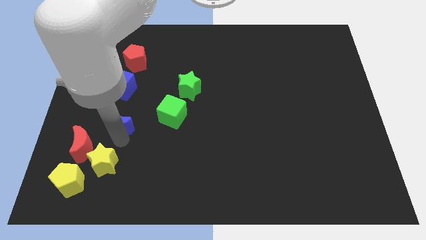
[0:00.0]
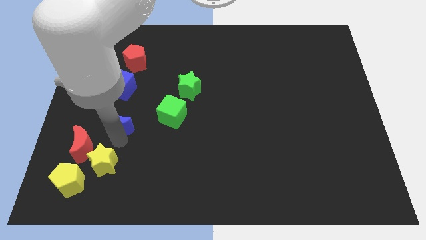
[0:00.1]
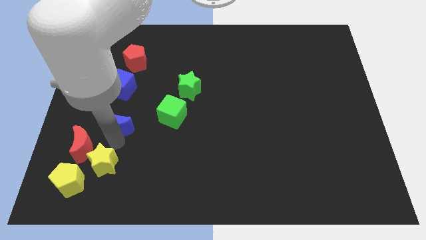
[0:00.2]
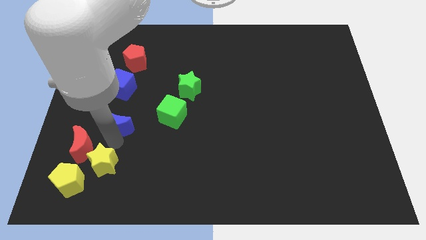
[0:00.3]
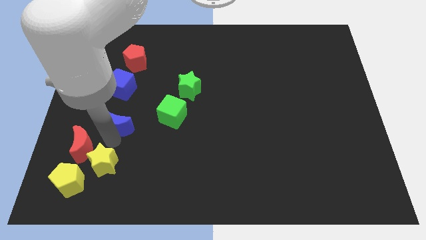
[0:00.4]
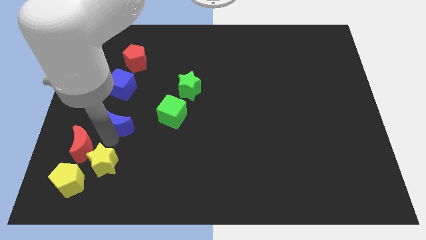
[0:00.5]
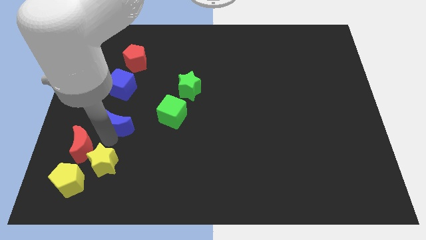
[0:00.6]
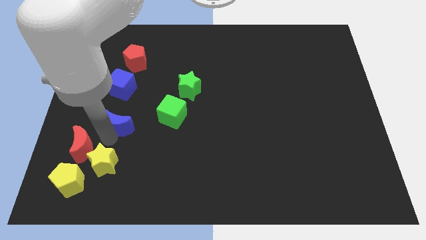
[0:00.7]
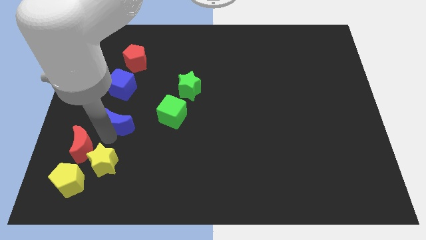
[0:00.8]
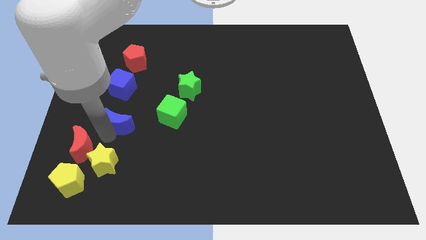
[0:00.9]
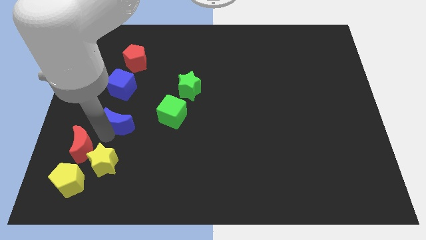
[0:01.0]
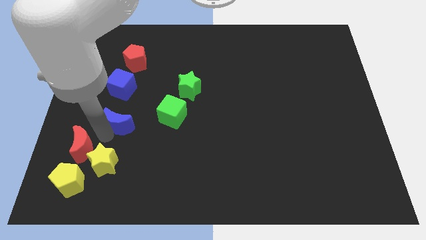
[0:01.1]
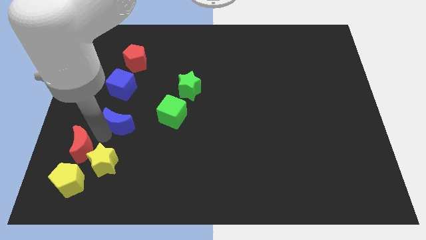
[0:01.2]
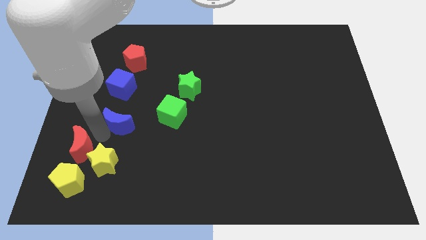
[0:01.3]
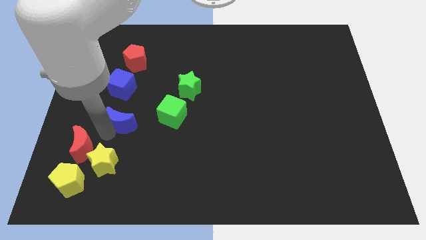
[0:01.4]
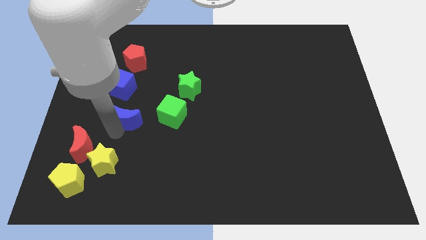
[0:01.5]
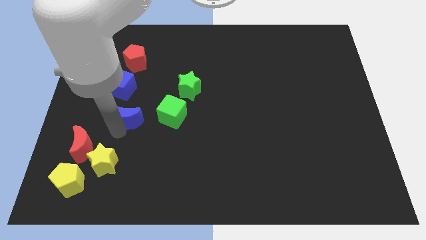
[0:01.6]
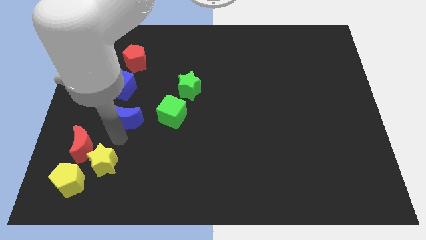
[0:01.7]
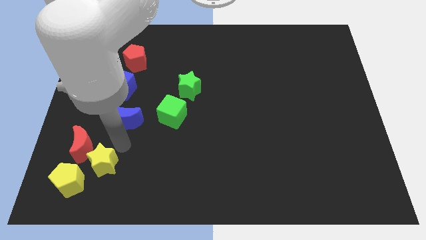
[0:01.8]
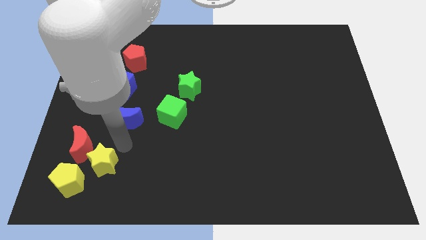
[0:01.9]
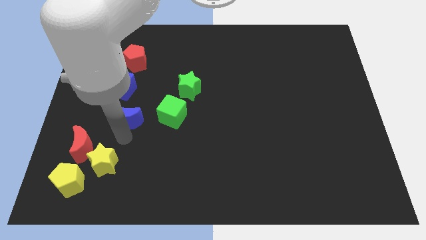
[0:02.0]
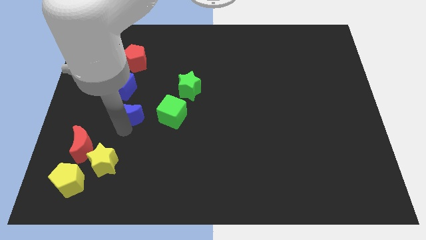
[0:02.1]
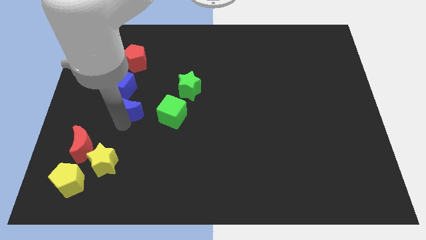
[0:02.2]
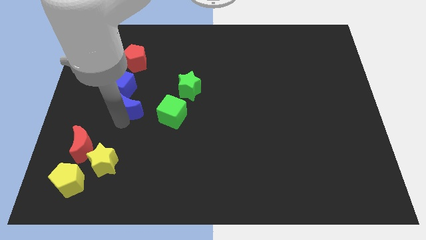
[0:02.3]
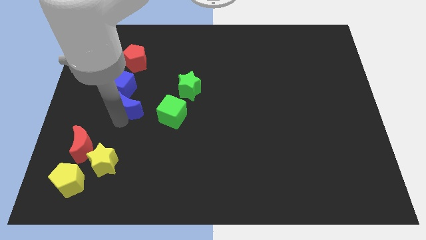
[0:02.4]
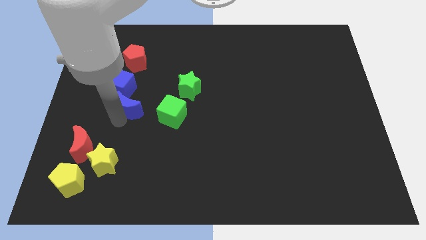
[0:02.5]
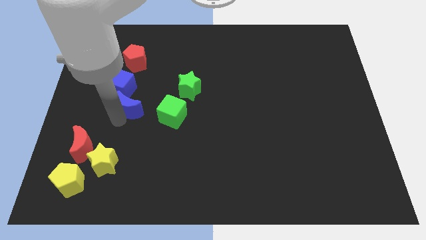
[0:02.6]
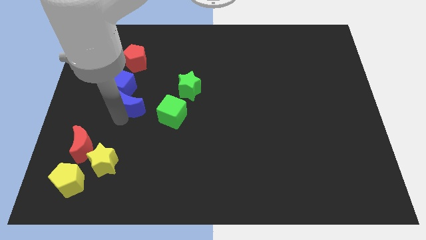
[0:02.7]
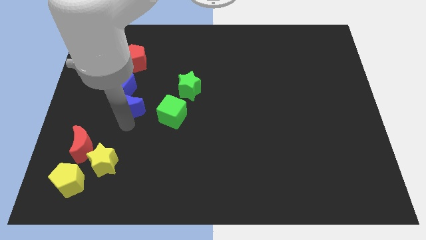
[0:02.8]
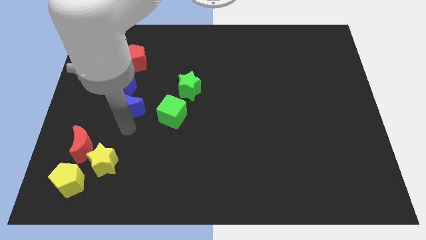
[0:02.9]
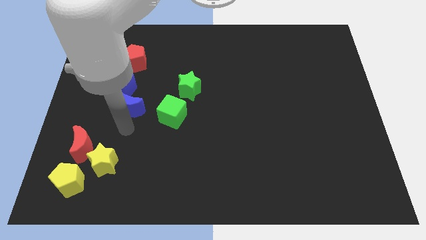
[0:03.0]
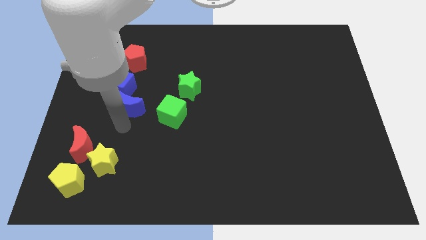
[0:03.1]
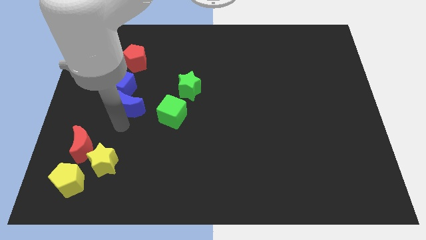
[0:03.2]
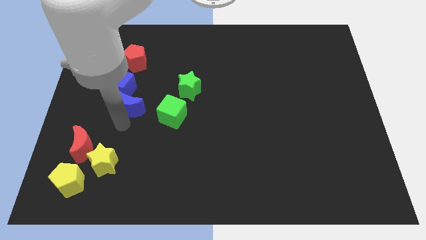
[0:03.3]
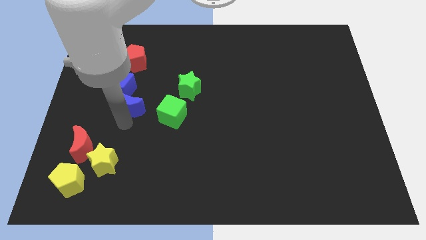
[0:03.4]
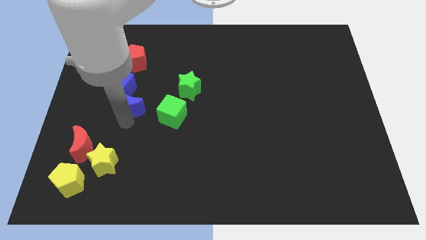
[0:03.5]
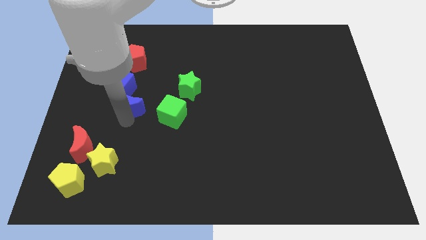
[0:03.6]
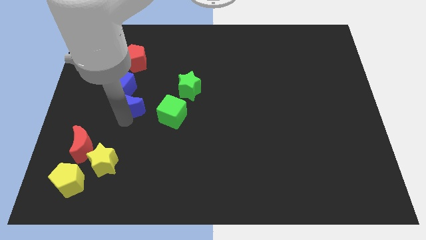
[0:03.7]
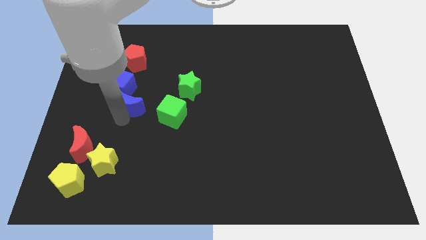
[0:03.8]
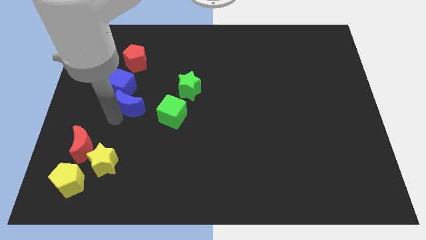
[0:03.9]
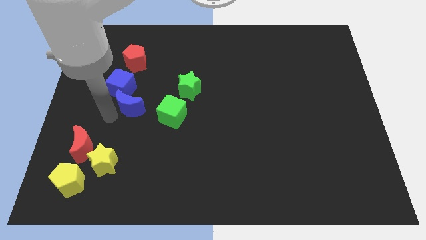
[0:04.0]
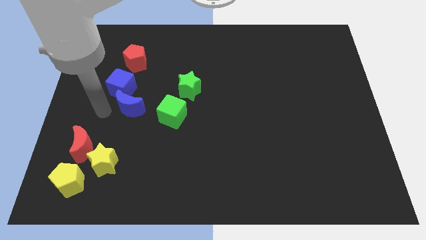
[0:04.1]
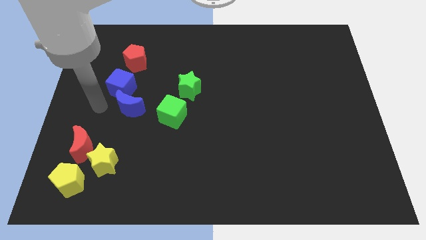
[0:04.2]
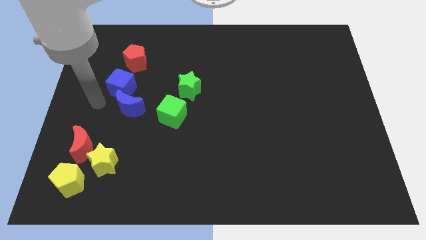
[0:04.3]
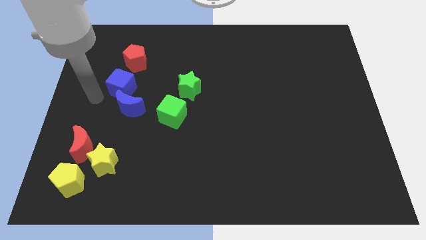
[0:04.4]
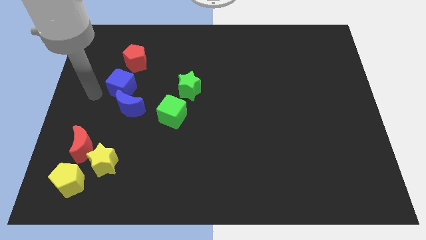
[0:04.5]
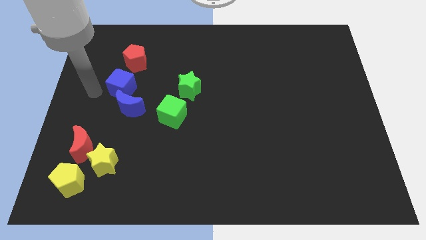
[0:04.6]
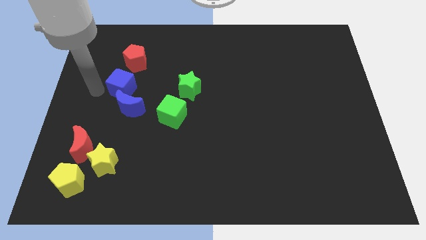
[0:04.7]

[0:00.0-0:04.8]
move the blue crescent into the blue cube

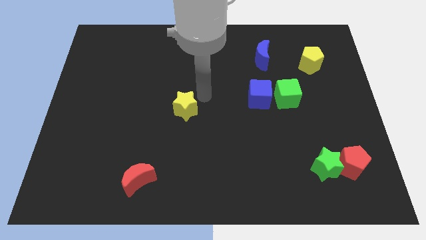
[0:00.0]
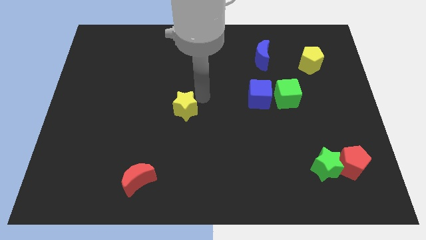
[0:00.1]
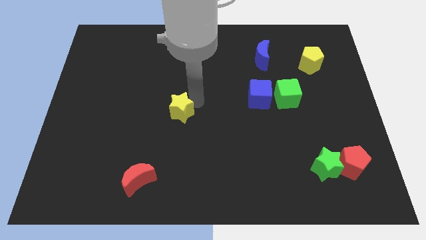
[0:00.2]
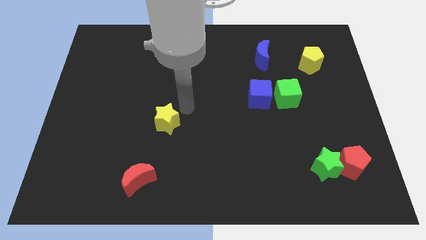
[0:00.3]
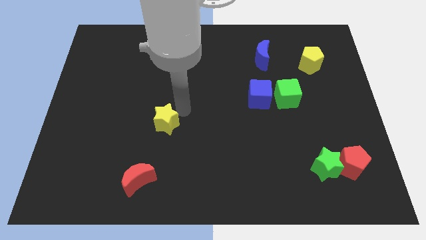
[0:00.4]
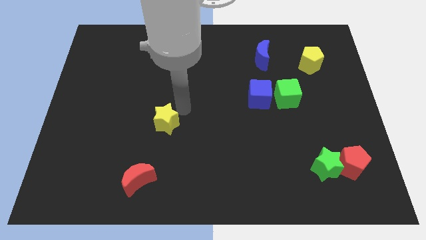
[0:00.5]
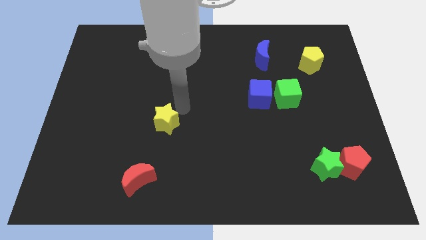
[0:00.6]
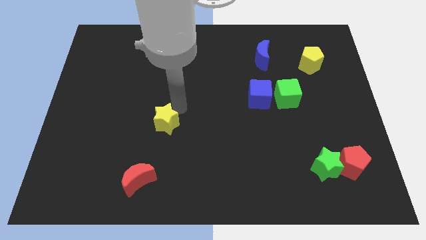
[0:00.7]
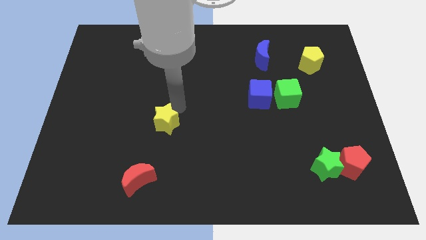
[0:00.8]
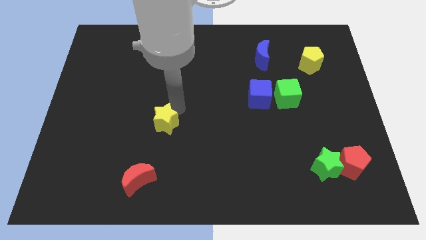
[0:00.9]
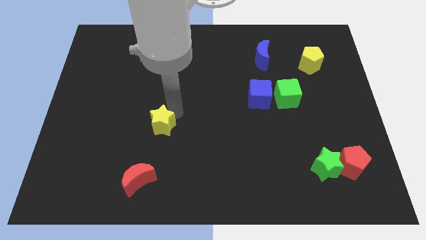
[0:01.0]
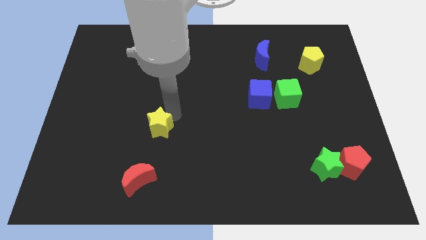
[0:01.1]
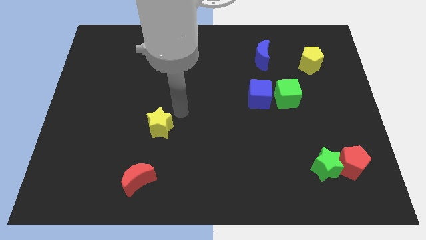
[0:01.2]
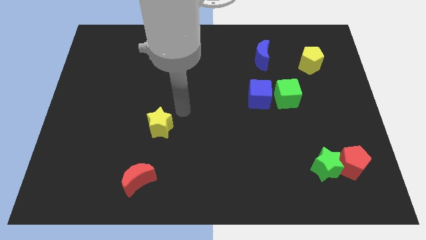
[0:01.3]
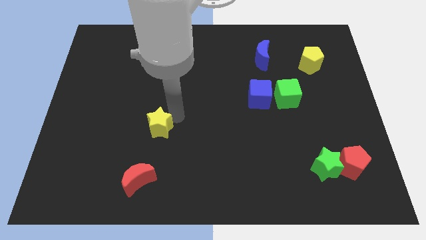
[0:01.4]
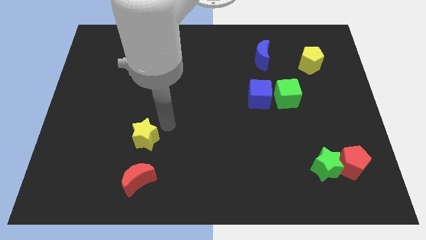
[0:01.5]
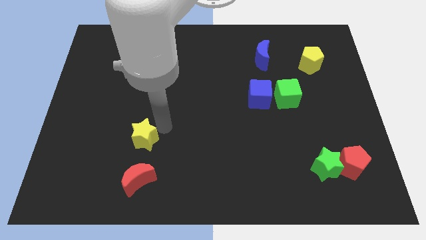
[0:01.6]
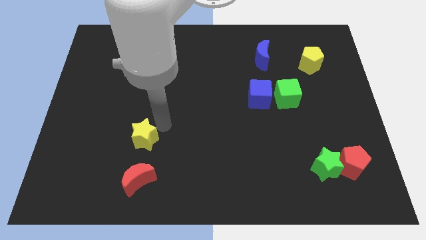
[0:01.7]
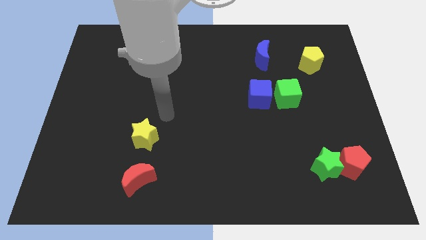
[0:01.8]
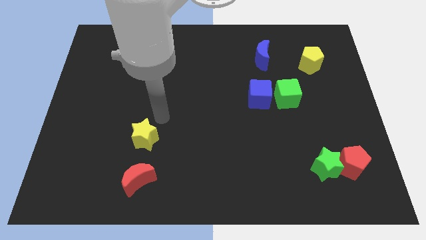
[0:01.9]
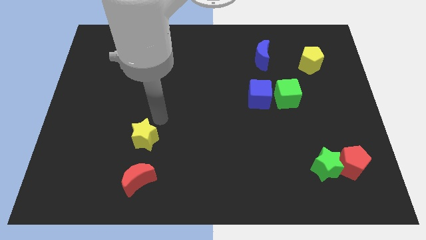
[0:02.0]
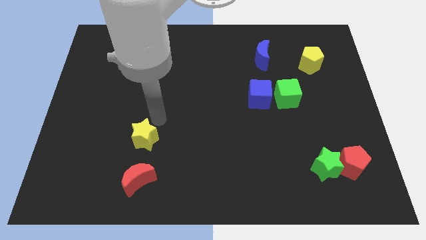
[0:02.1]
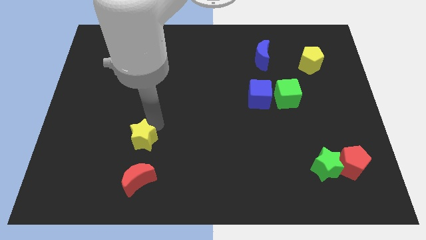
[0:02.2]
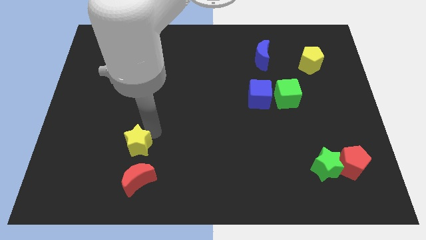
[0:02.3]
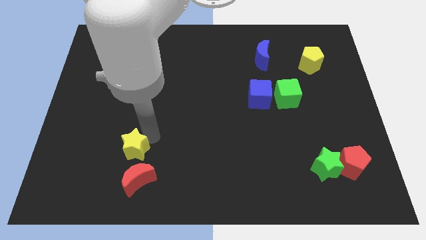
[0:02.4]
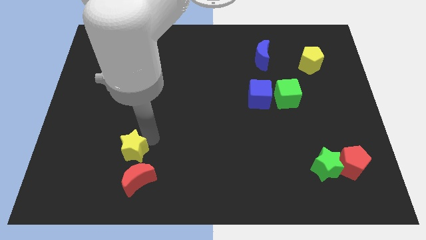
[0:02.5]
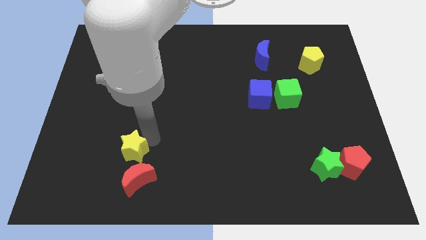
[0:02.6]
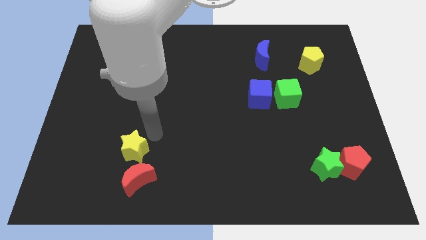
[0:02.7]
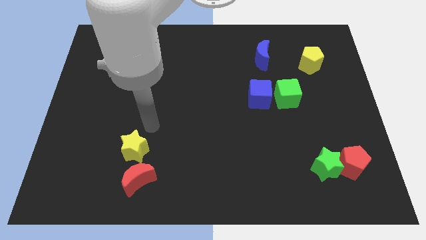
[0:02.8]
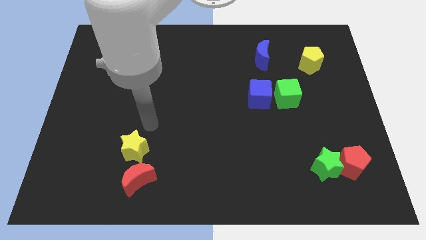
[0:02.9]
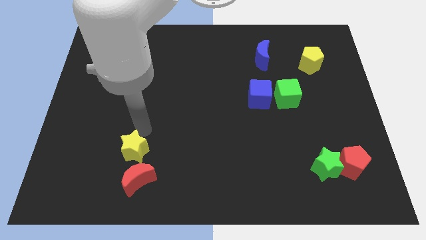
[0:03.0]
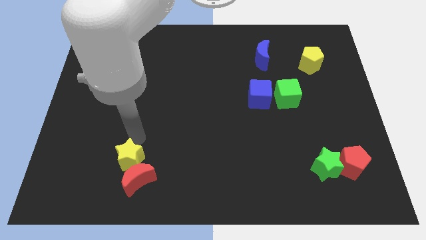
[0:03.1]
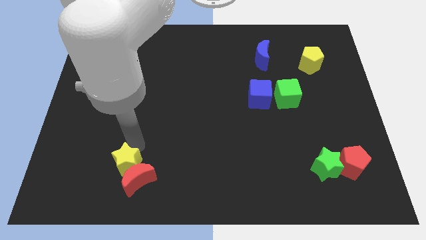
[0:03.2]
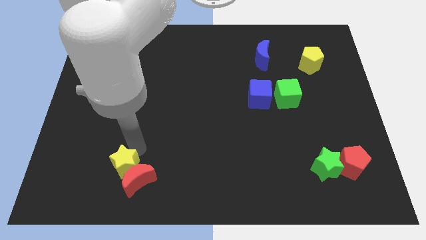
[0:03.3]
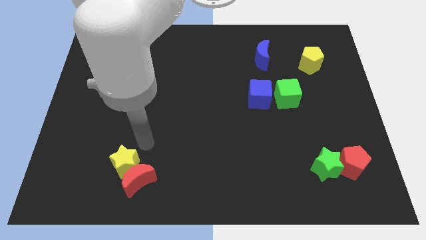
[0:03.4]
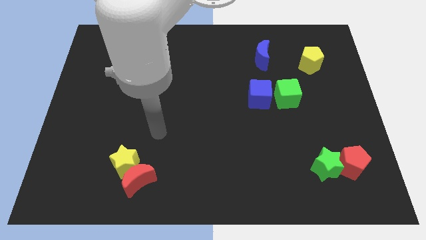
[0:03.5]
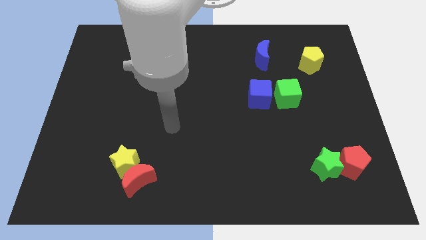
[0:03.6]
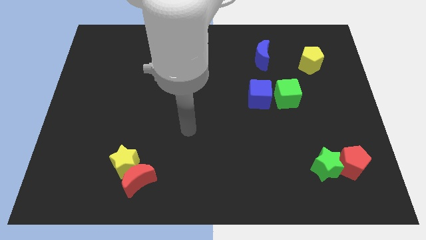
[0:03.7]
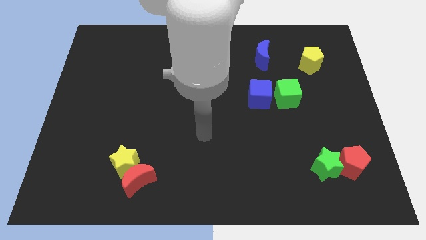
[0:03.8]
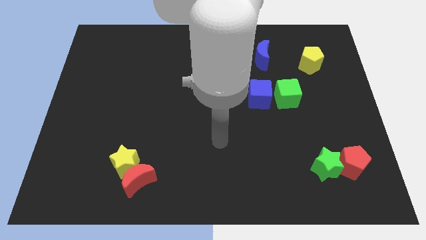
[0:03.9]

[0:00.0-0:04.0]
place the yellow star to the top of the red moon
